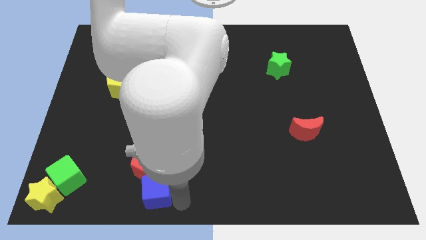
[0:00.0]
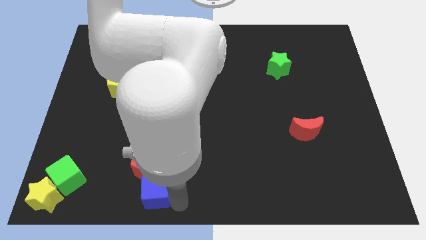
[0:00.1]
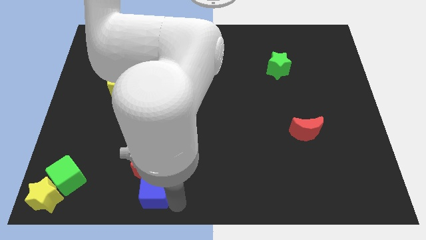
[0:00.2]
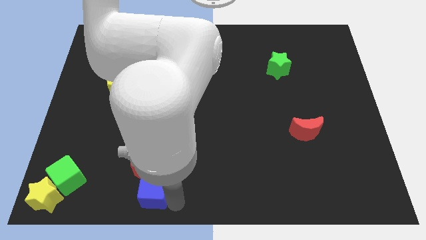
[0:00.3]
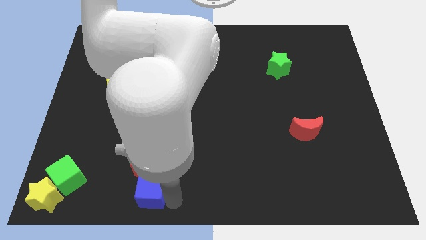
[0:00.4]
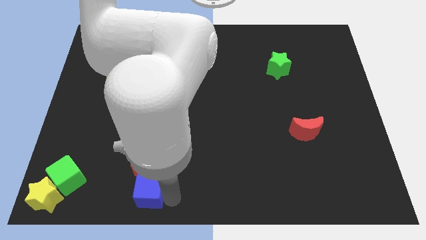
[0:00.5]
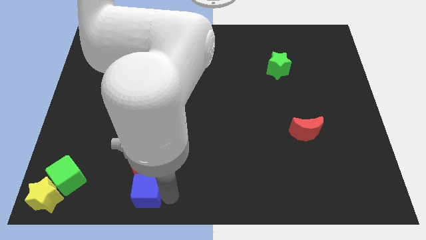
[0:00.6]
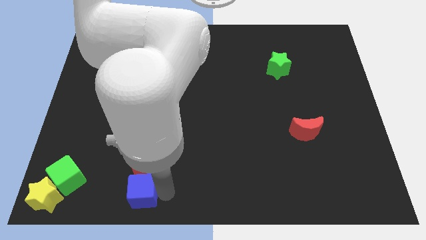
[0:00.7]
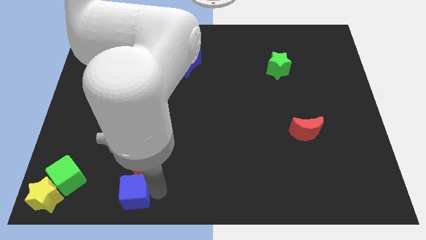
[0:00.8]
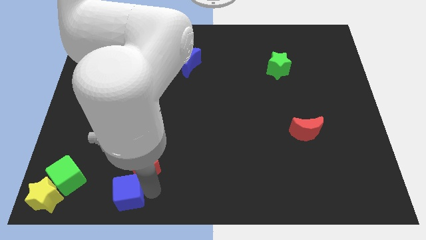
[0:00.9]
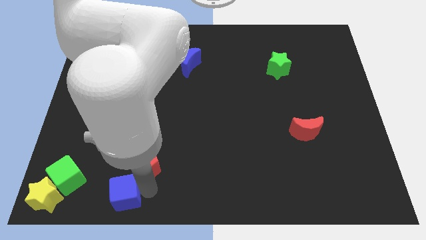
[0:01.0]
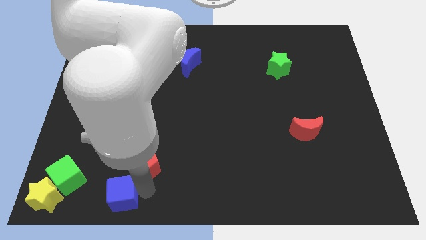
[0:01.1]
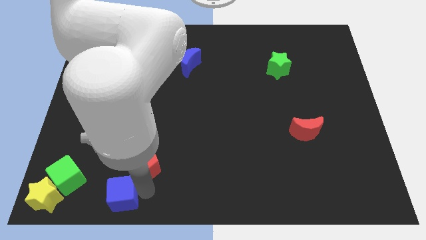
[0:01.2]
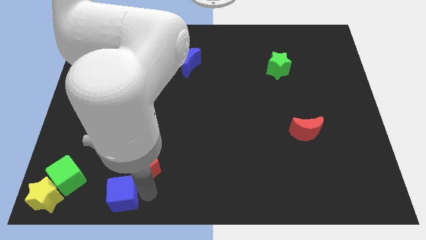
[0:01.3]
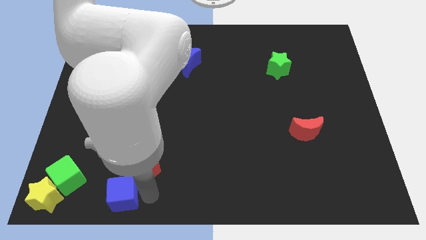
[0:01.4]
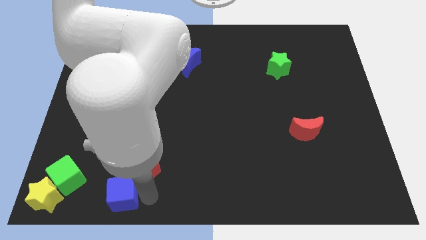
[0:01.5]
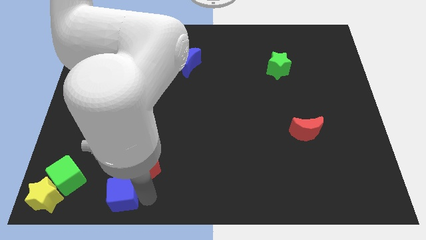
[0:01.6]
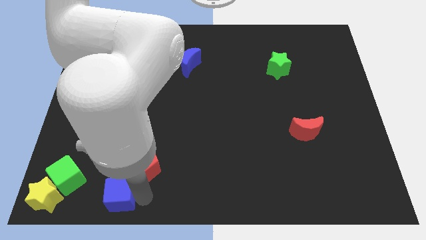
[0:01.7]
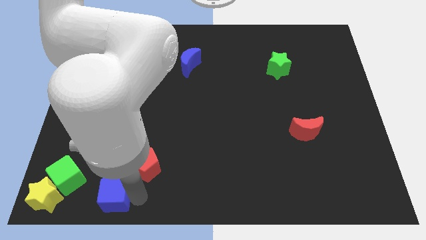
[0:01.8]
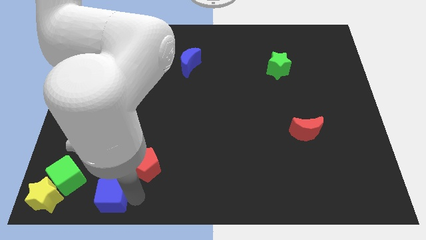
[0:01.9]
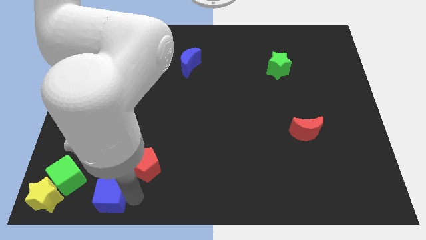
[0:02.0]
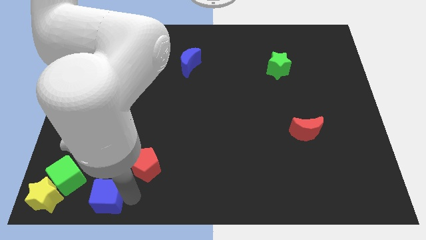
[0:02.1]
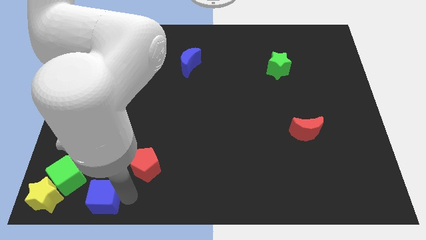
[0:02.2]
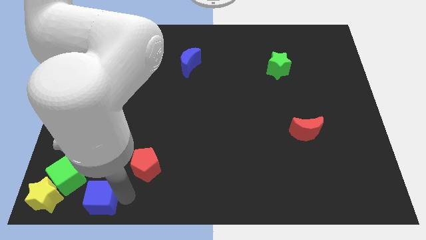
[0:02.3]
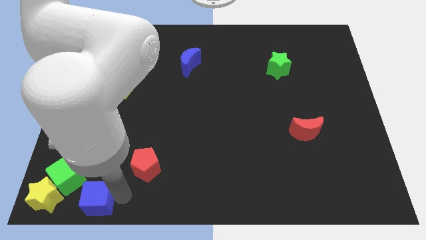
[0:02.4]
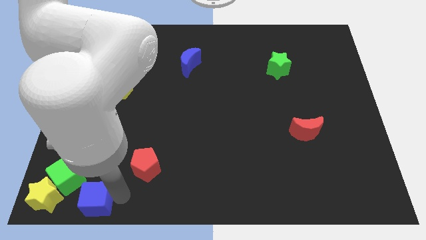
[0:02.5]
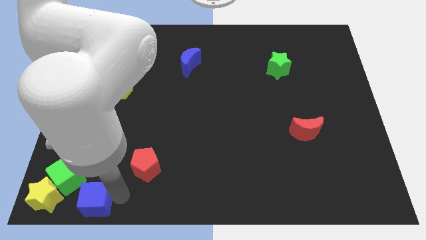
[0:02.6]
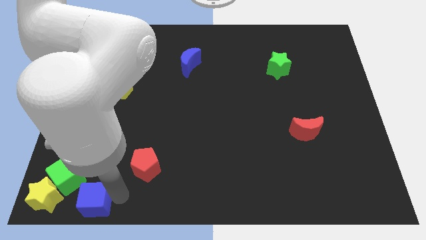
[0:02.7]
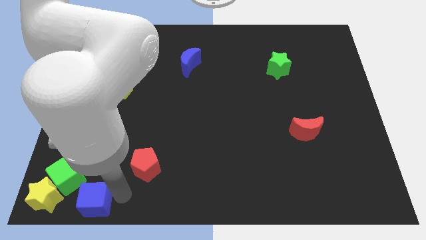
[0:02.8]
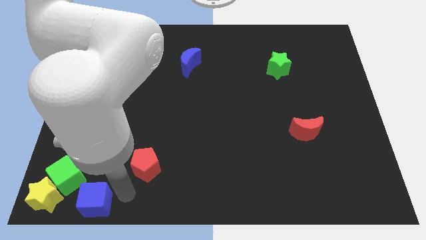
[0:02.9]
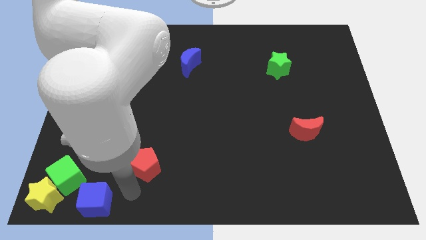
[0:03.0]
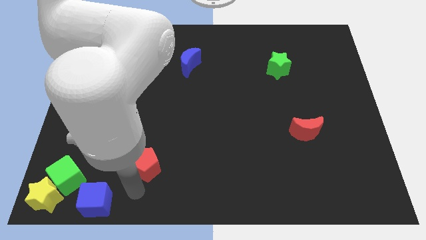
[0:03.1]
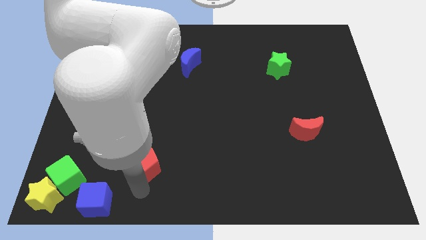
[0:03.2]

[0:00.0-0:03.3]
place the blue cube to the bottom right side of the green cube

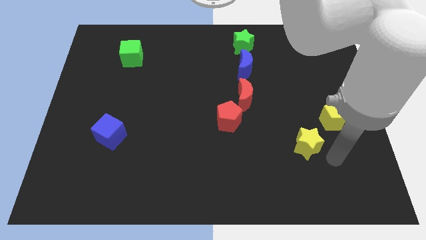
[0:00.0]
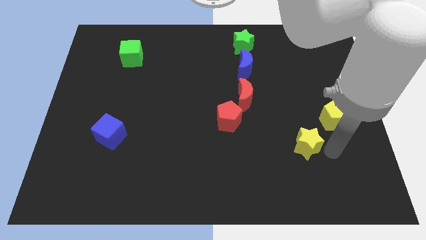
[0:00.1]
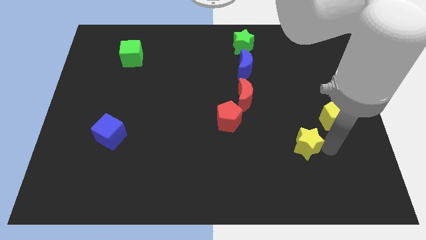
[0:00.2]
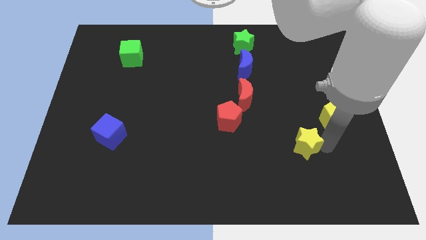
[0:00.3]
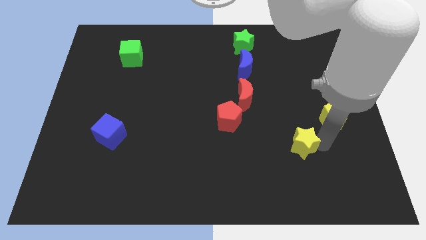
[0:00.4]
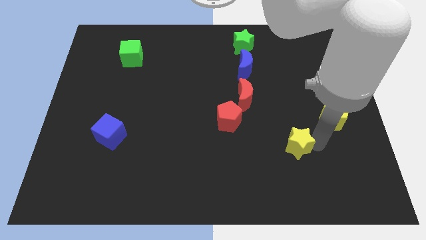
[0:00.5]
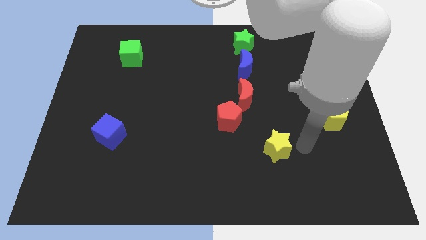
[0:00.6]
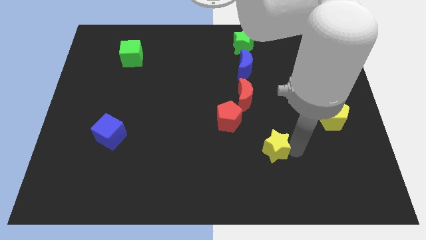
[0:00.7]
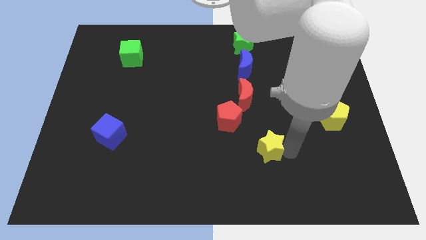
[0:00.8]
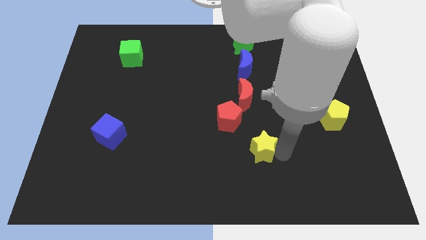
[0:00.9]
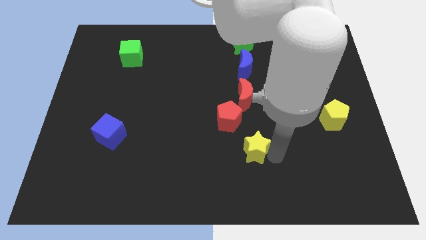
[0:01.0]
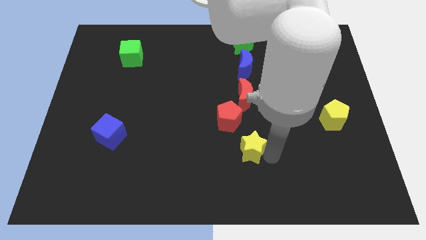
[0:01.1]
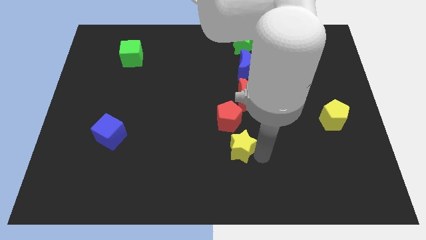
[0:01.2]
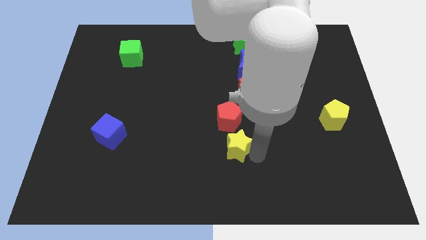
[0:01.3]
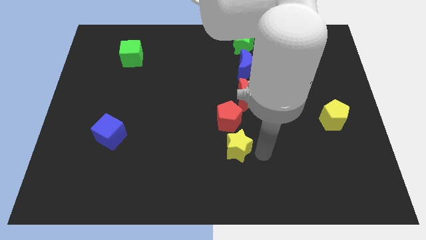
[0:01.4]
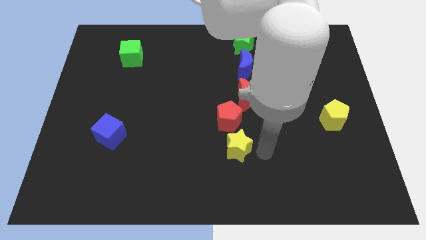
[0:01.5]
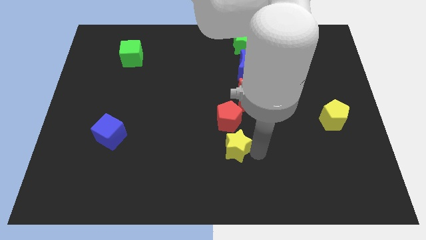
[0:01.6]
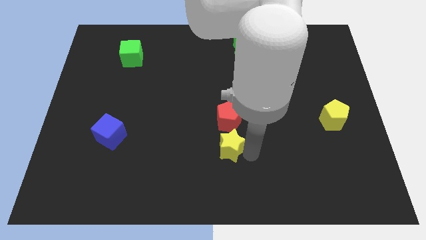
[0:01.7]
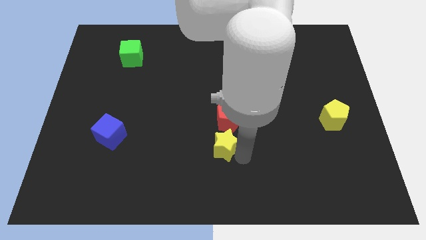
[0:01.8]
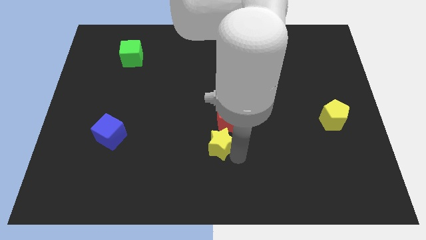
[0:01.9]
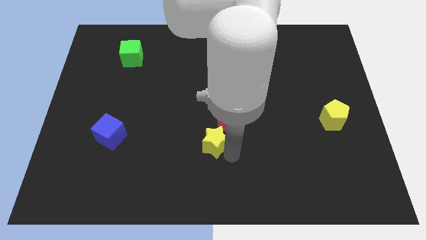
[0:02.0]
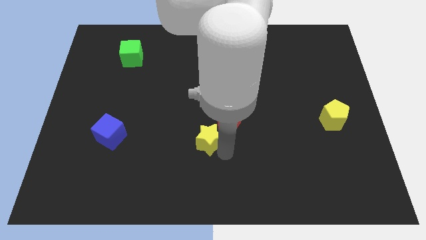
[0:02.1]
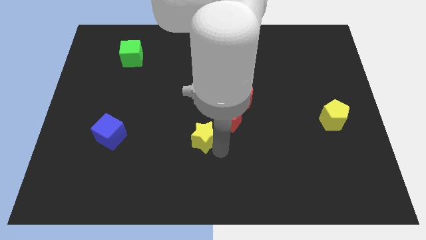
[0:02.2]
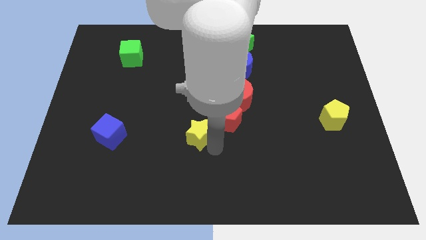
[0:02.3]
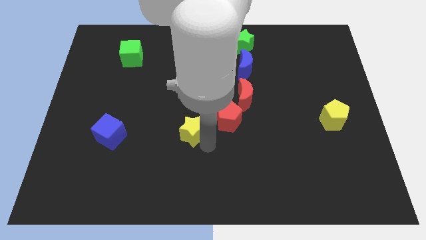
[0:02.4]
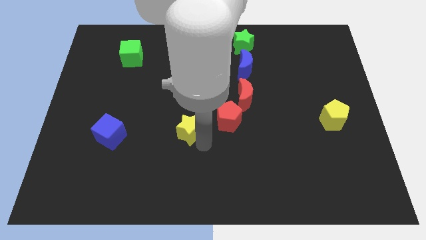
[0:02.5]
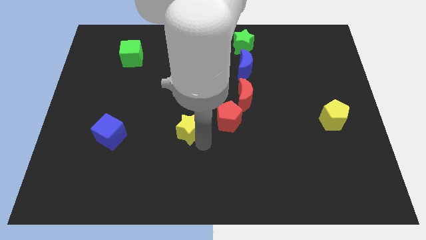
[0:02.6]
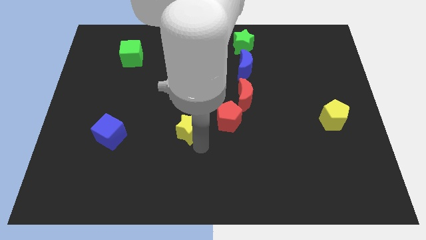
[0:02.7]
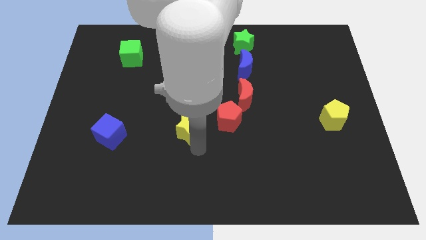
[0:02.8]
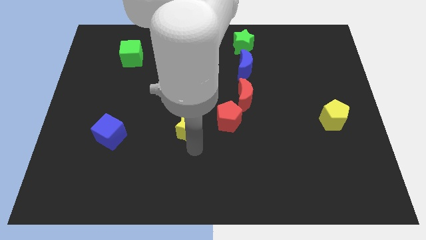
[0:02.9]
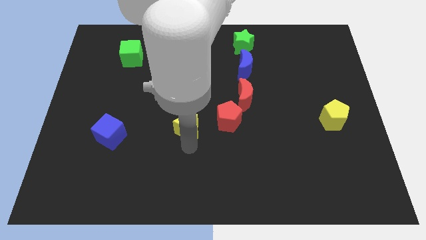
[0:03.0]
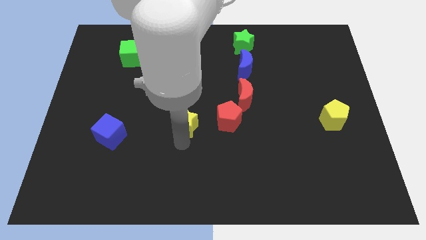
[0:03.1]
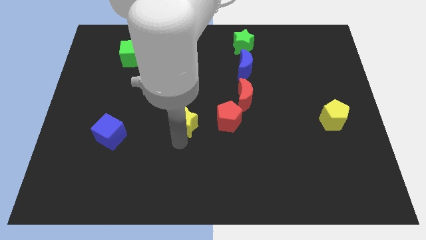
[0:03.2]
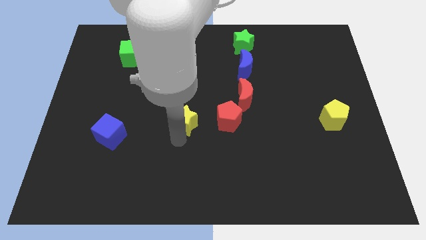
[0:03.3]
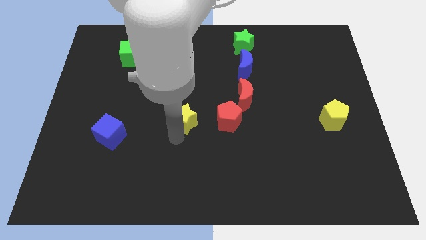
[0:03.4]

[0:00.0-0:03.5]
place the yellow star left to the red pentagon

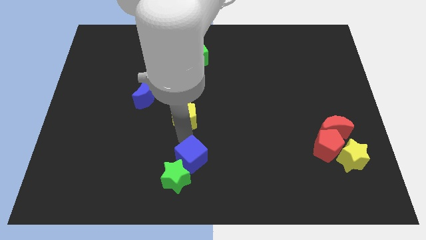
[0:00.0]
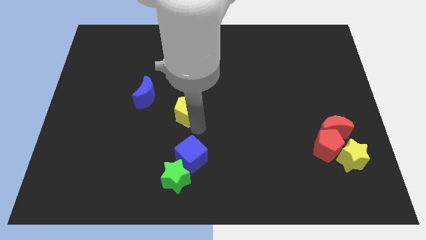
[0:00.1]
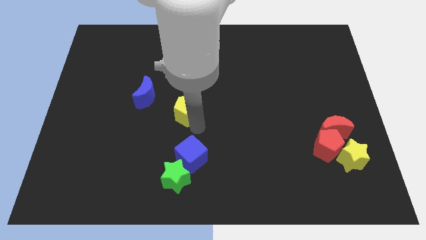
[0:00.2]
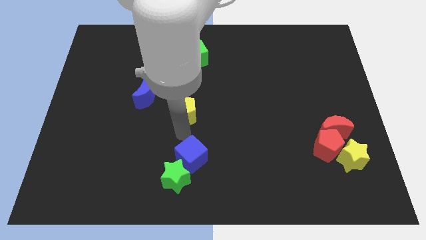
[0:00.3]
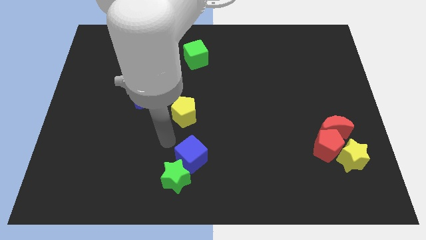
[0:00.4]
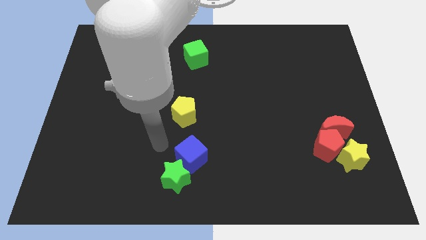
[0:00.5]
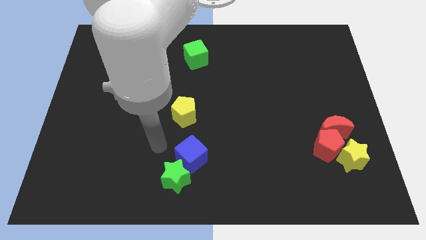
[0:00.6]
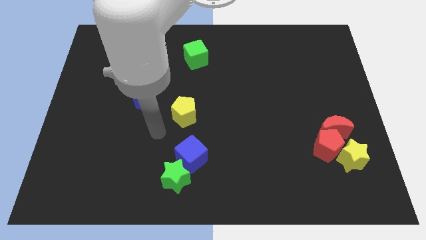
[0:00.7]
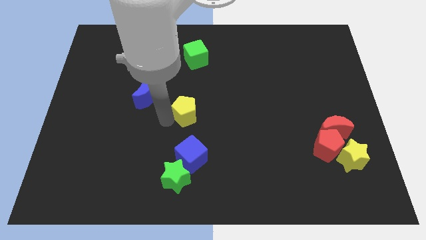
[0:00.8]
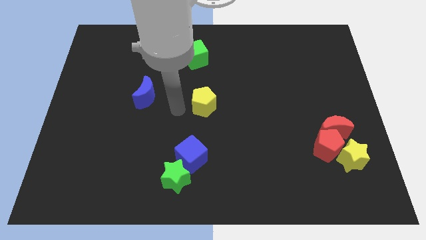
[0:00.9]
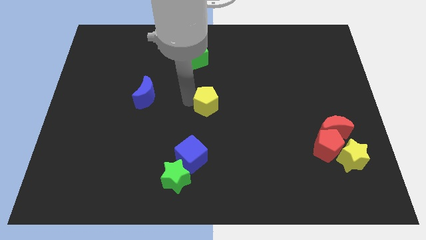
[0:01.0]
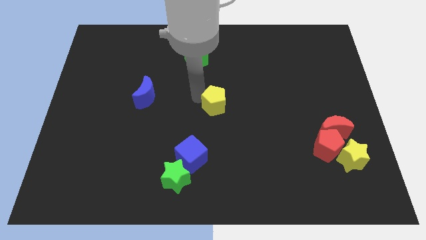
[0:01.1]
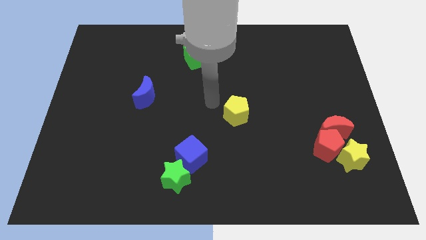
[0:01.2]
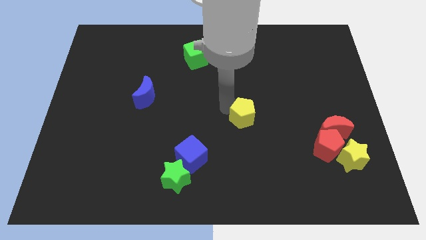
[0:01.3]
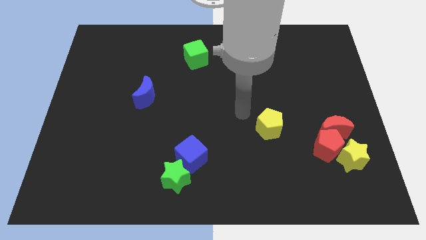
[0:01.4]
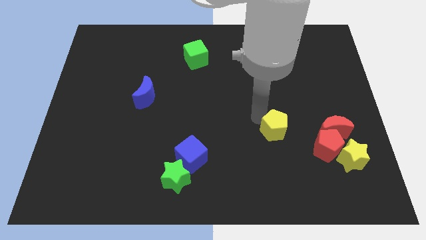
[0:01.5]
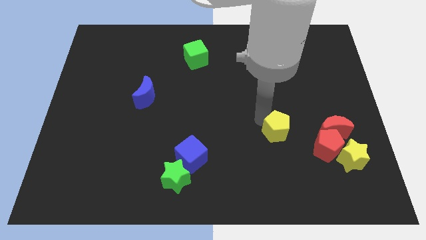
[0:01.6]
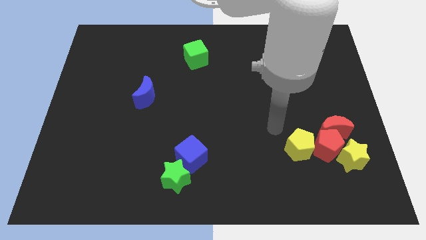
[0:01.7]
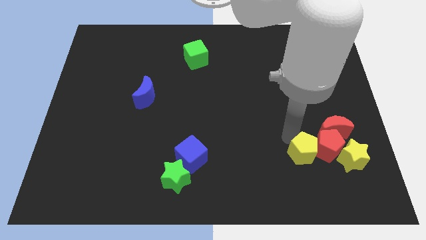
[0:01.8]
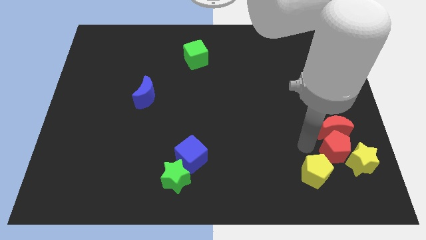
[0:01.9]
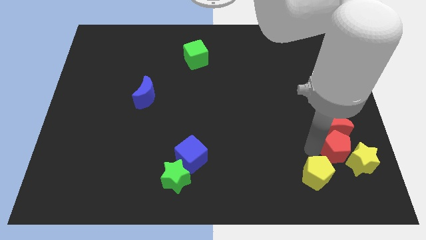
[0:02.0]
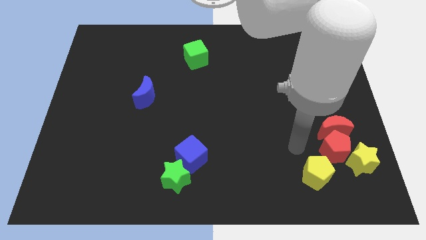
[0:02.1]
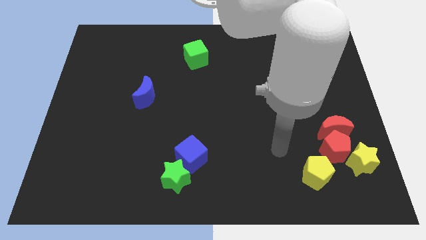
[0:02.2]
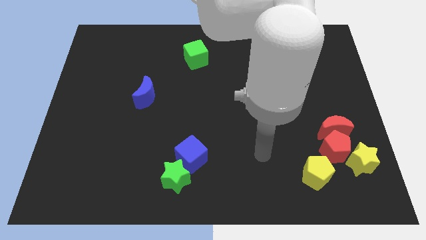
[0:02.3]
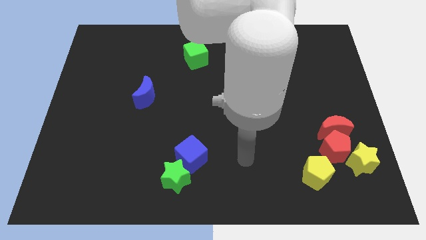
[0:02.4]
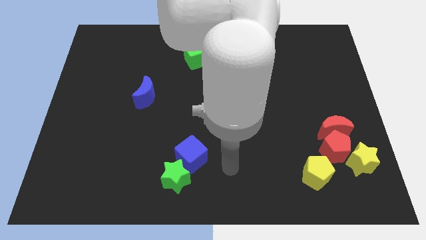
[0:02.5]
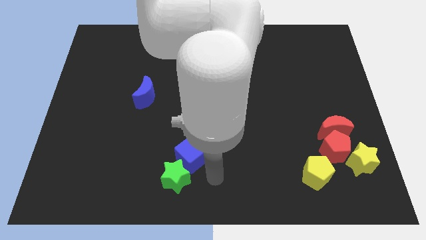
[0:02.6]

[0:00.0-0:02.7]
push the yellow pentagon diagonally to the bottom left of the red pentagon
